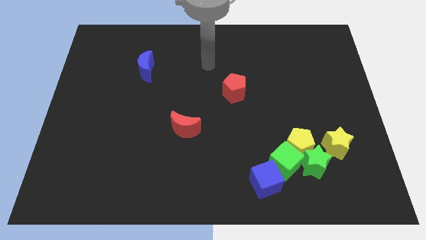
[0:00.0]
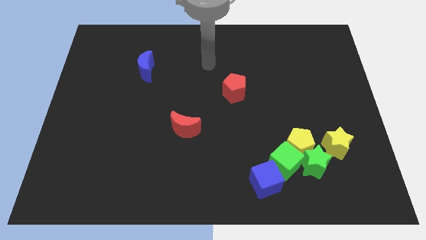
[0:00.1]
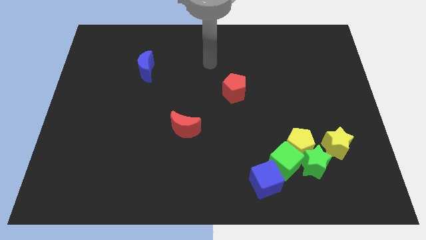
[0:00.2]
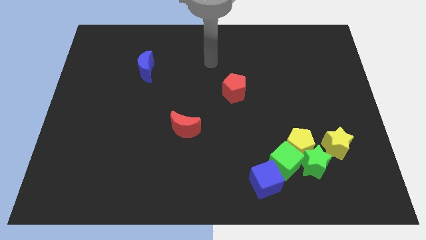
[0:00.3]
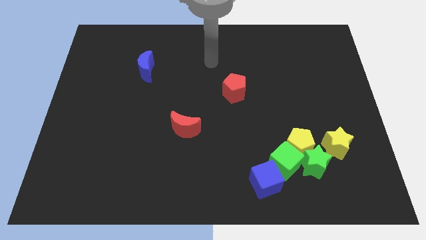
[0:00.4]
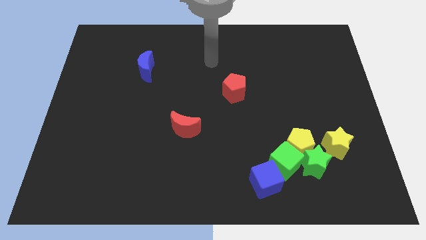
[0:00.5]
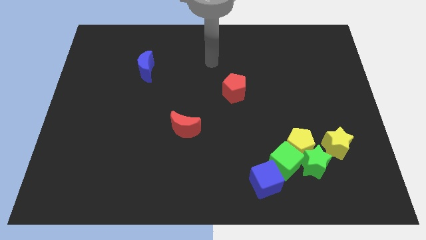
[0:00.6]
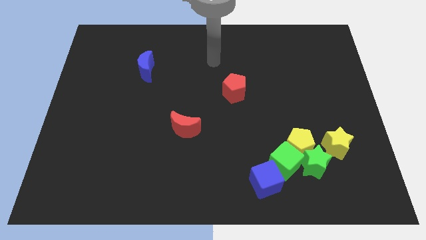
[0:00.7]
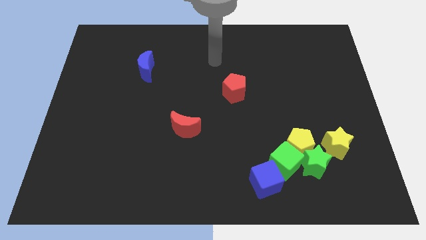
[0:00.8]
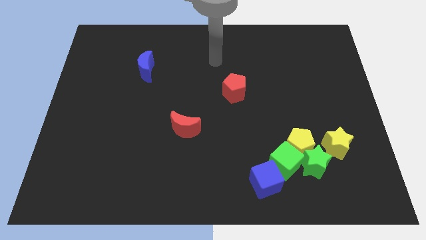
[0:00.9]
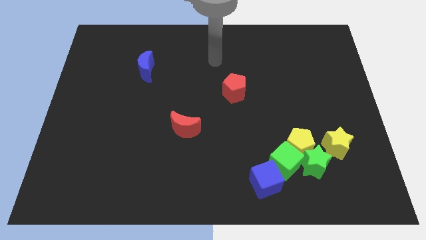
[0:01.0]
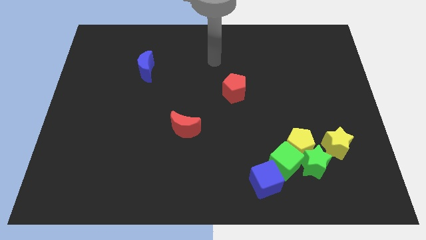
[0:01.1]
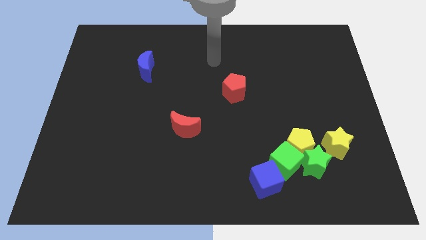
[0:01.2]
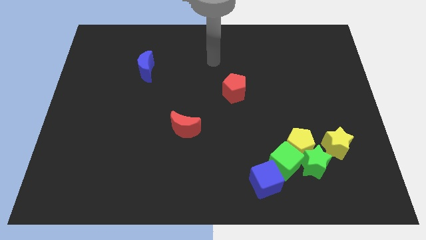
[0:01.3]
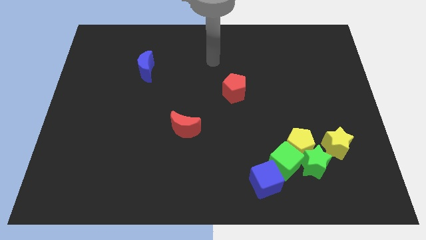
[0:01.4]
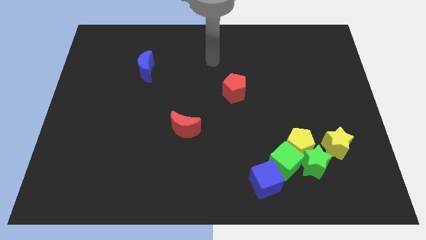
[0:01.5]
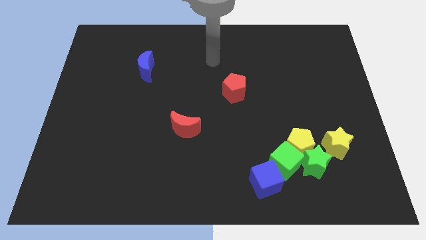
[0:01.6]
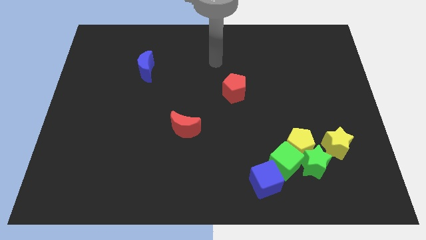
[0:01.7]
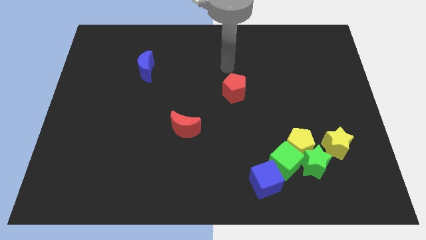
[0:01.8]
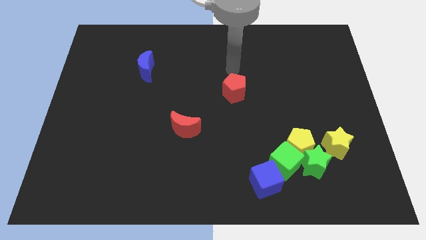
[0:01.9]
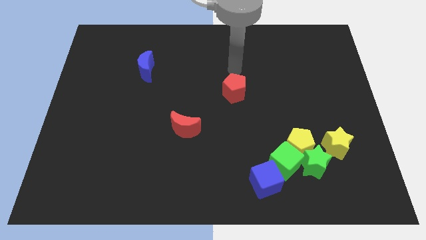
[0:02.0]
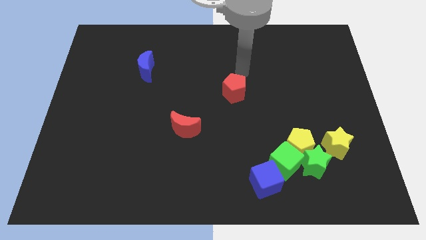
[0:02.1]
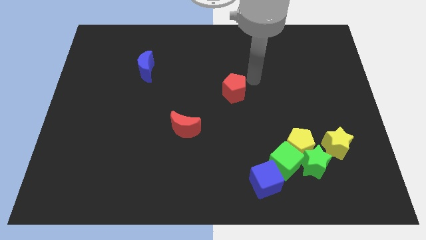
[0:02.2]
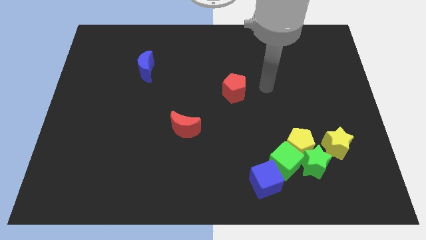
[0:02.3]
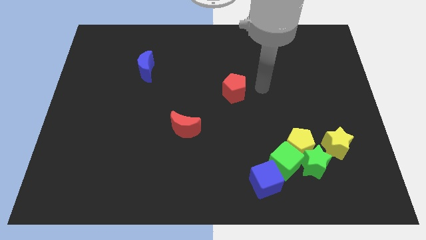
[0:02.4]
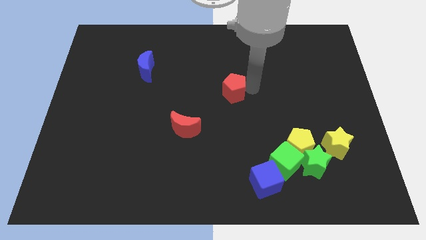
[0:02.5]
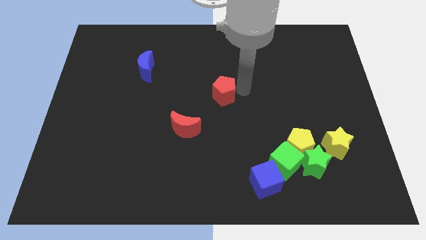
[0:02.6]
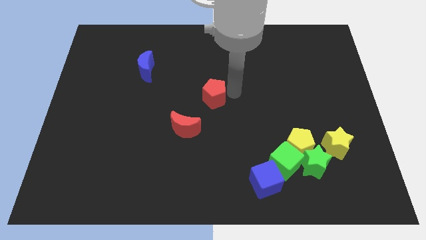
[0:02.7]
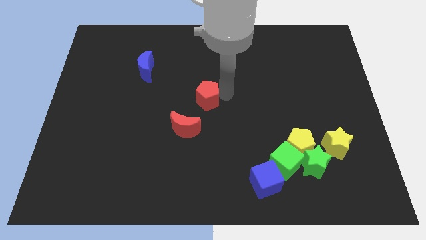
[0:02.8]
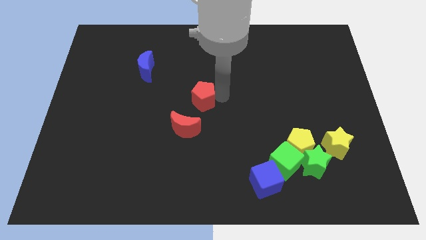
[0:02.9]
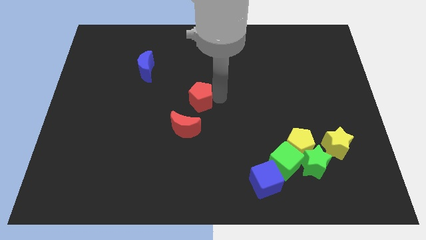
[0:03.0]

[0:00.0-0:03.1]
move red pentagon towards the red moon

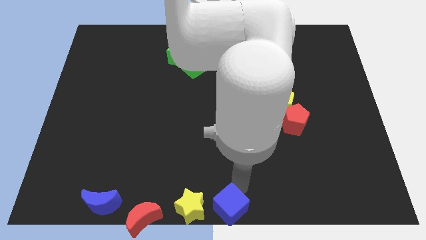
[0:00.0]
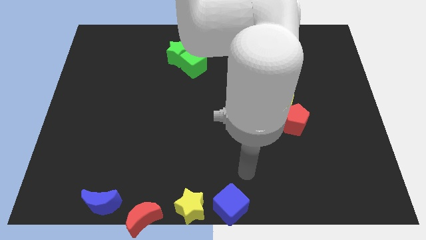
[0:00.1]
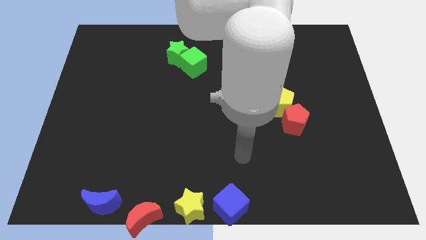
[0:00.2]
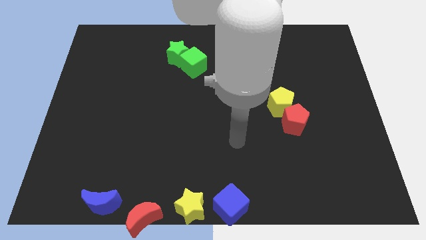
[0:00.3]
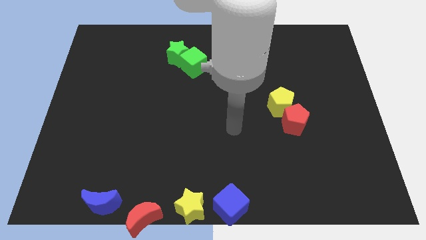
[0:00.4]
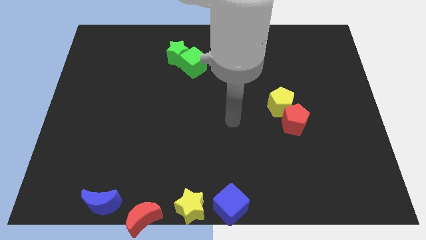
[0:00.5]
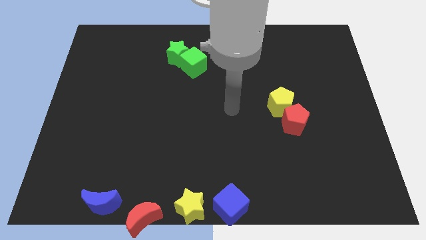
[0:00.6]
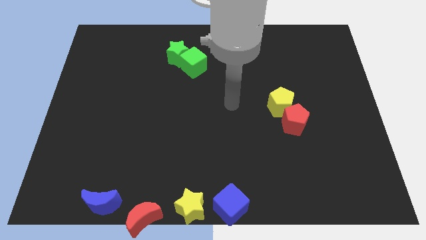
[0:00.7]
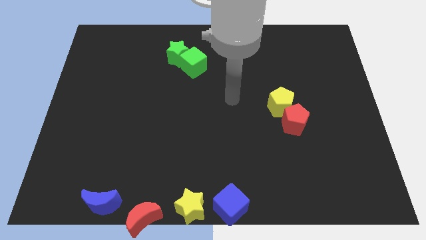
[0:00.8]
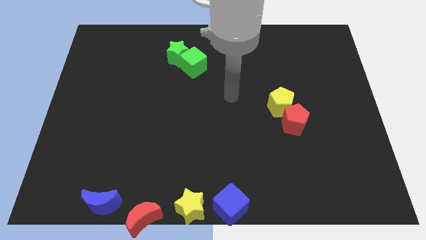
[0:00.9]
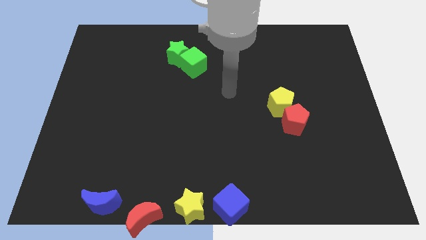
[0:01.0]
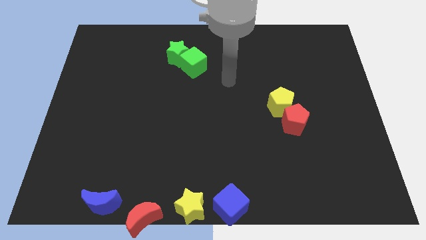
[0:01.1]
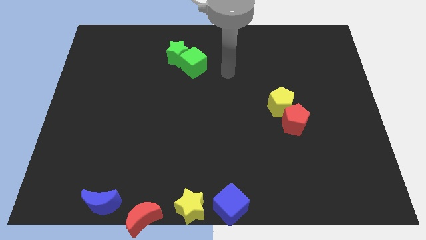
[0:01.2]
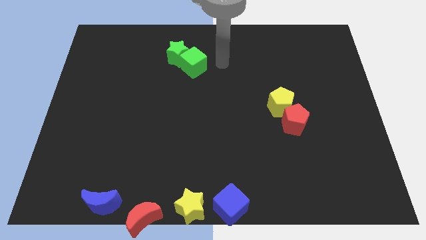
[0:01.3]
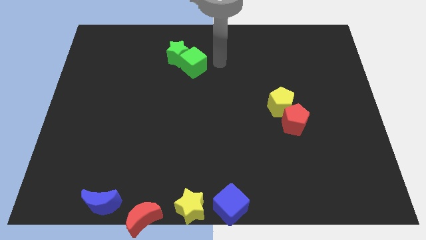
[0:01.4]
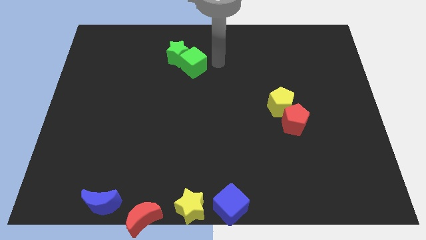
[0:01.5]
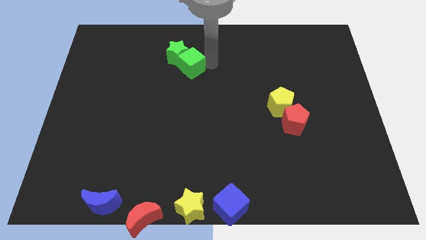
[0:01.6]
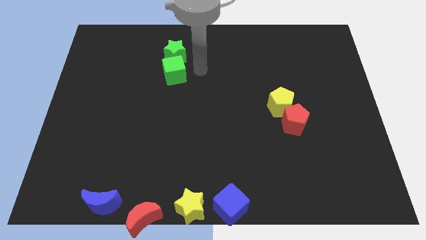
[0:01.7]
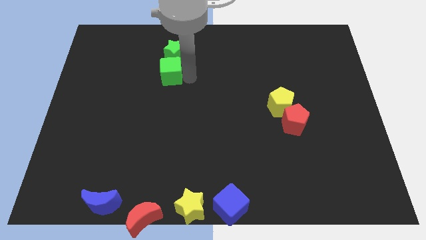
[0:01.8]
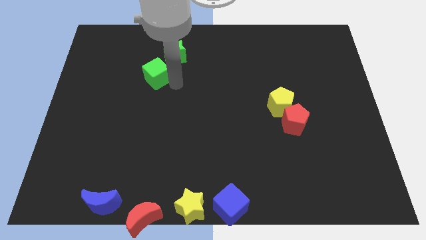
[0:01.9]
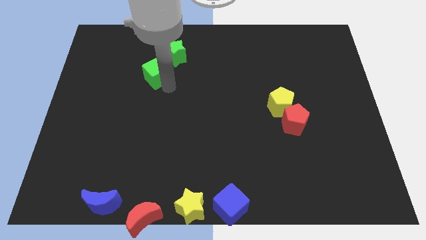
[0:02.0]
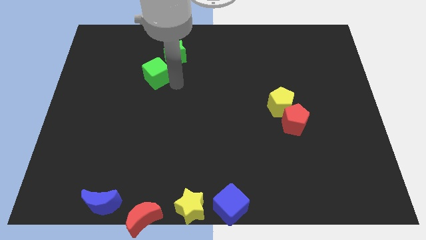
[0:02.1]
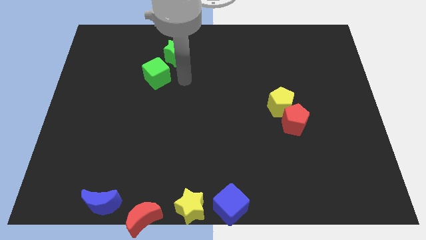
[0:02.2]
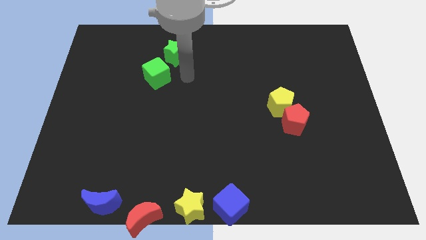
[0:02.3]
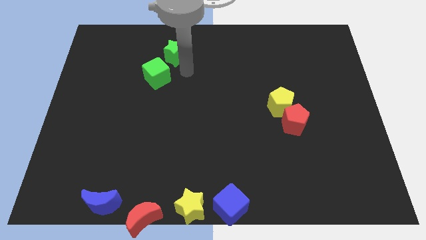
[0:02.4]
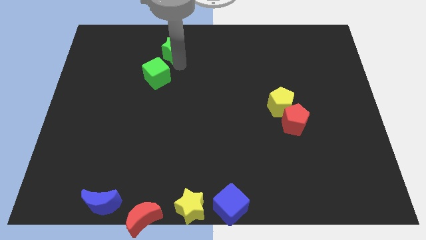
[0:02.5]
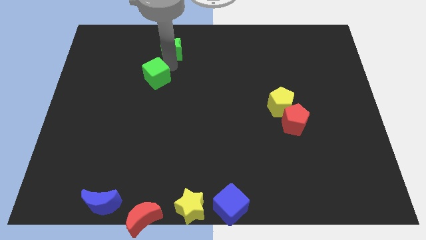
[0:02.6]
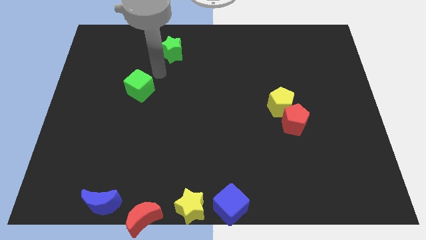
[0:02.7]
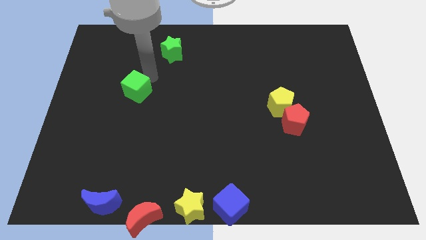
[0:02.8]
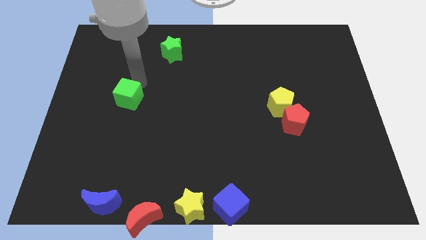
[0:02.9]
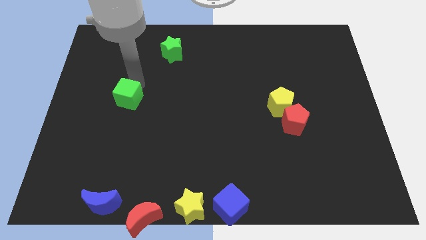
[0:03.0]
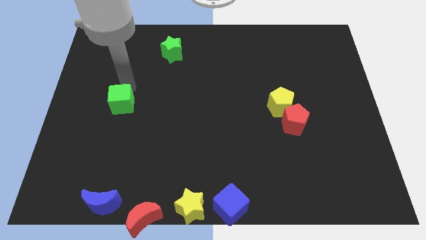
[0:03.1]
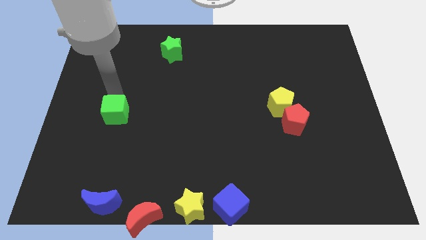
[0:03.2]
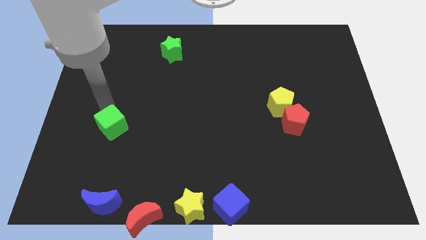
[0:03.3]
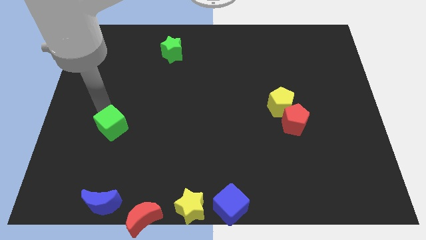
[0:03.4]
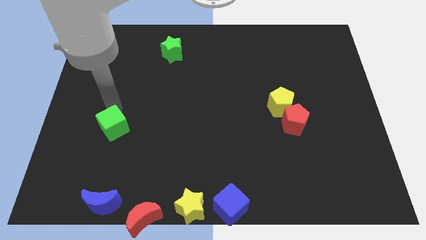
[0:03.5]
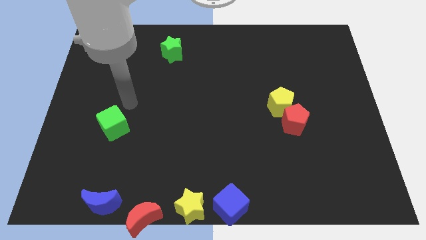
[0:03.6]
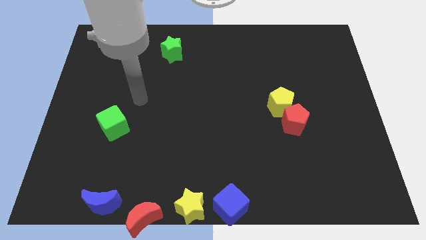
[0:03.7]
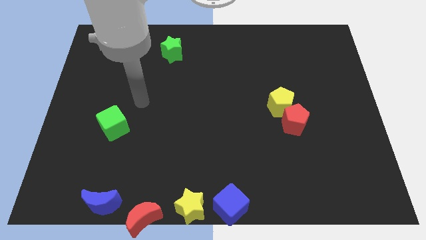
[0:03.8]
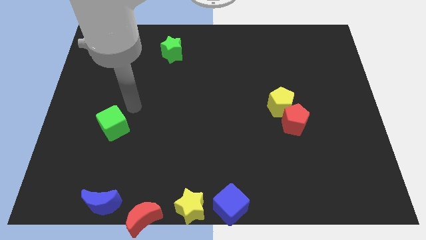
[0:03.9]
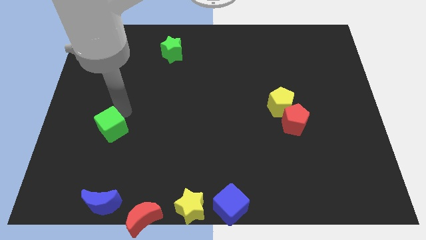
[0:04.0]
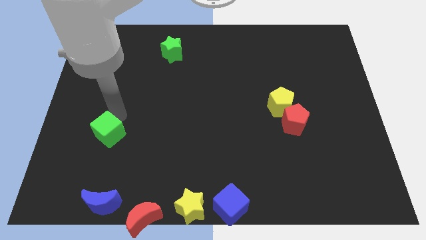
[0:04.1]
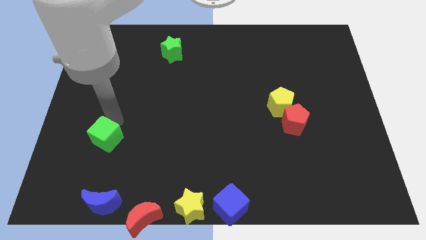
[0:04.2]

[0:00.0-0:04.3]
move the green cube to the top of the blue crescent

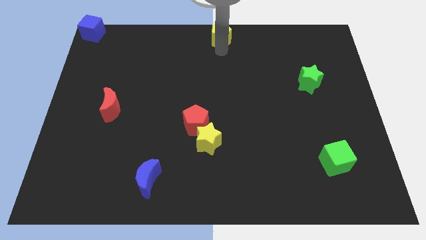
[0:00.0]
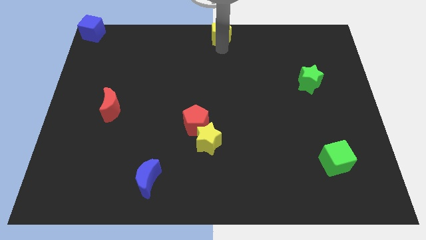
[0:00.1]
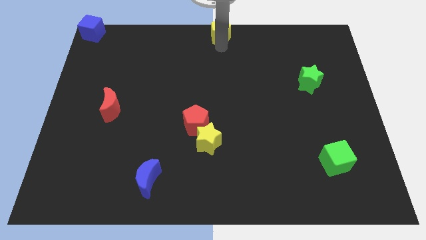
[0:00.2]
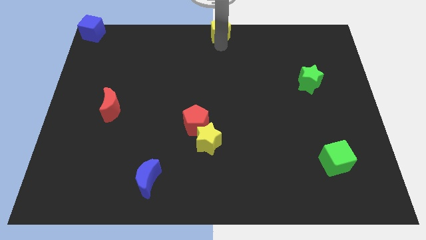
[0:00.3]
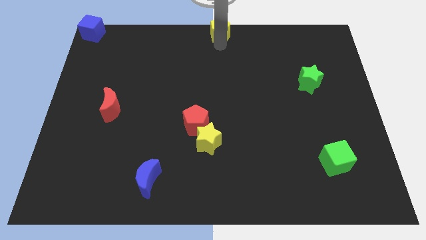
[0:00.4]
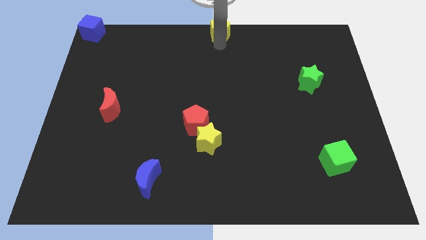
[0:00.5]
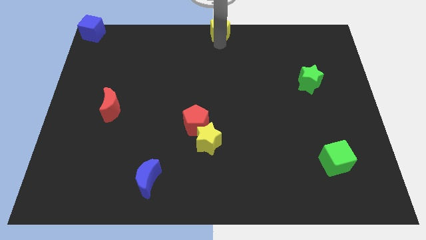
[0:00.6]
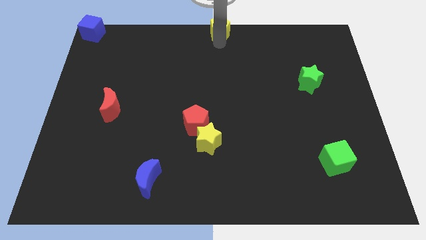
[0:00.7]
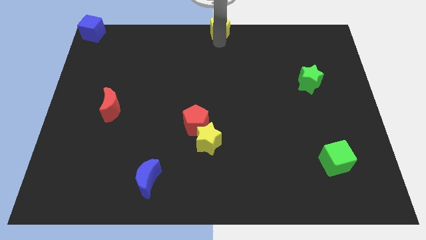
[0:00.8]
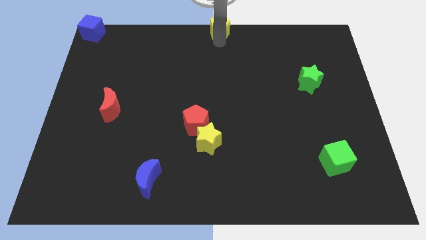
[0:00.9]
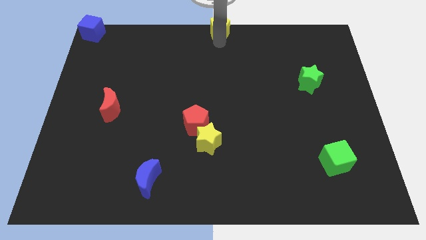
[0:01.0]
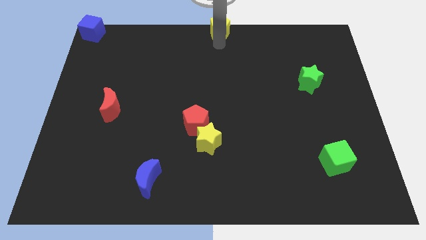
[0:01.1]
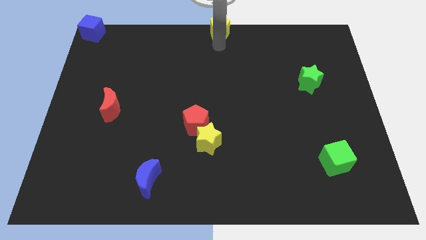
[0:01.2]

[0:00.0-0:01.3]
push the yellow pentagon at the top center of the board

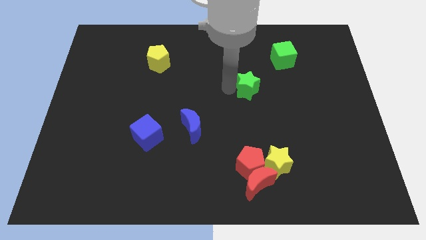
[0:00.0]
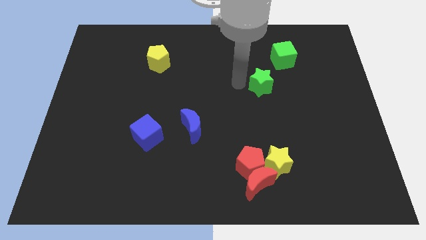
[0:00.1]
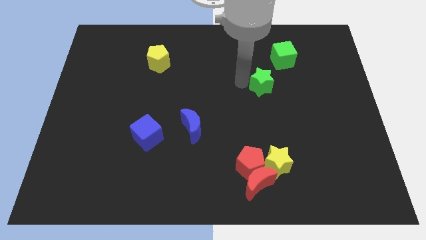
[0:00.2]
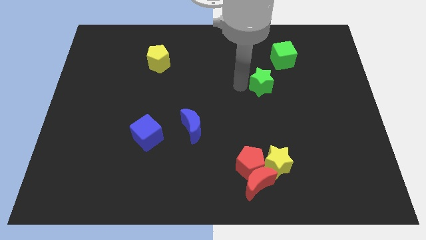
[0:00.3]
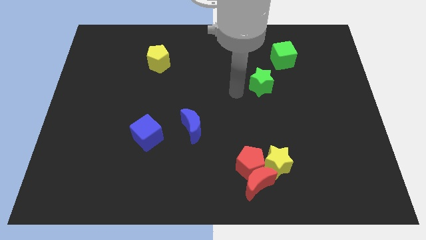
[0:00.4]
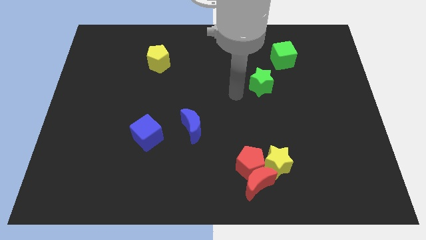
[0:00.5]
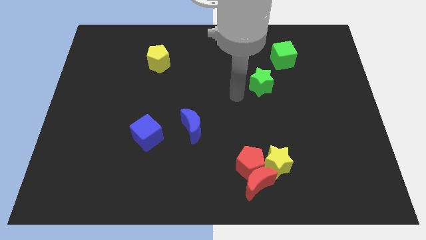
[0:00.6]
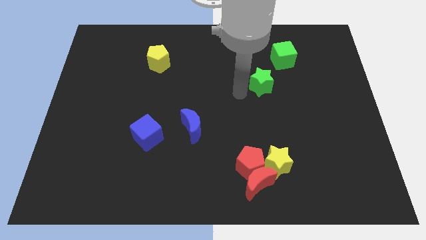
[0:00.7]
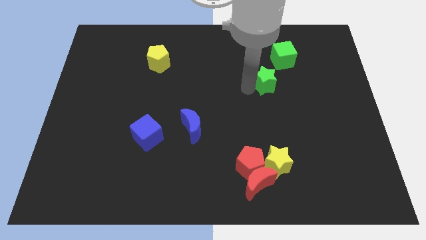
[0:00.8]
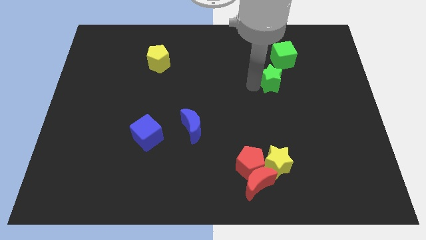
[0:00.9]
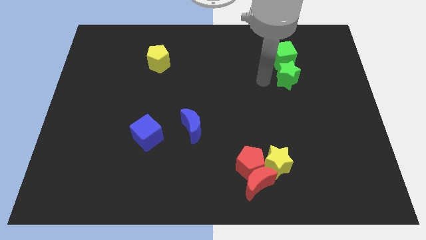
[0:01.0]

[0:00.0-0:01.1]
place the green star vertically below the green cube
